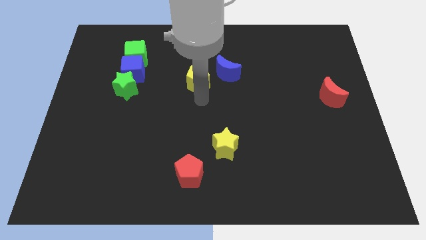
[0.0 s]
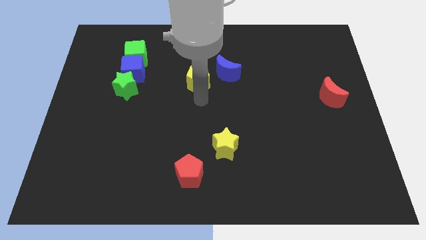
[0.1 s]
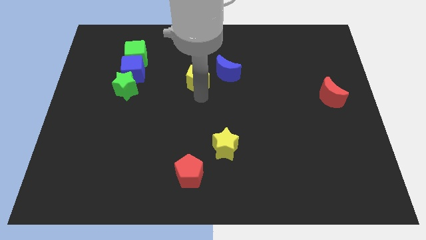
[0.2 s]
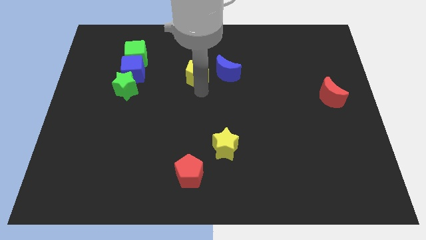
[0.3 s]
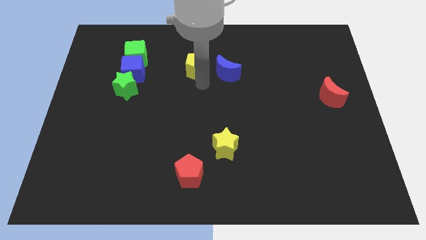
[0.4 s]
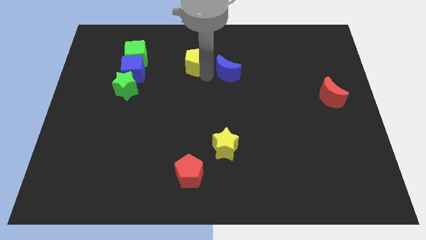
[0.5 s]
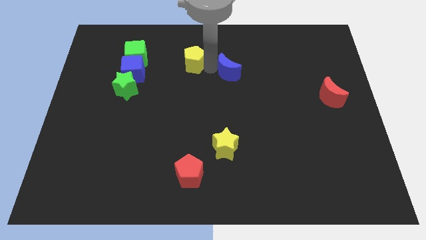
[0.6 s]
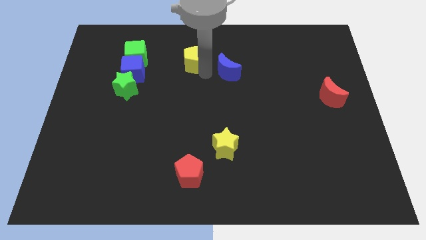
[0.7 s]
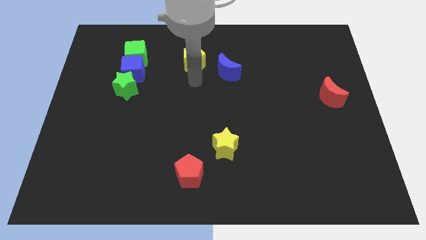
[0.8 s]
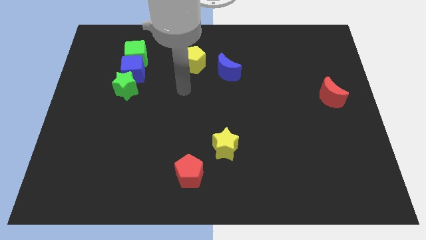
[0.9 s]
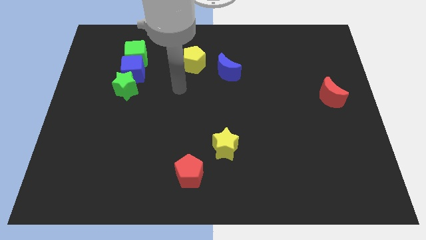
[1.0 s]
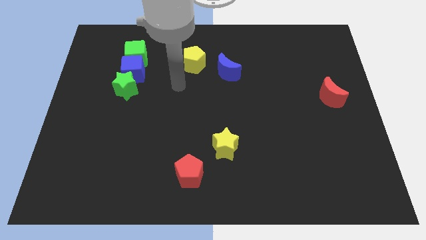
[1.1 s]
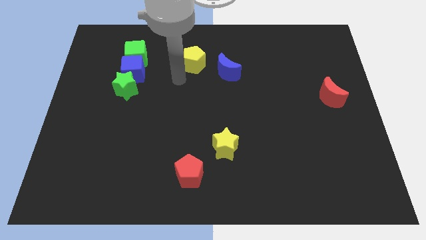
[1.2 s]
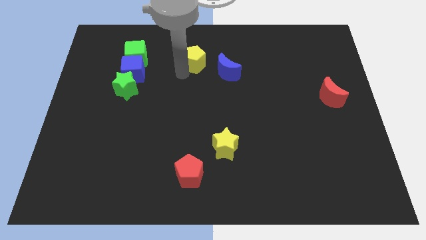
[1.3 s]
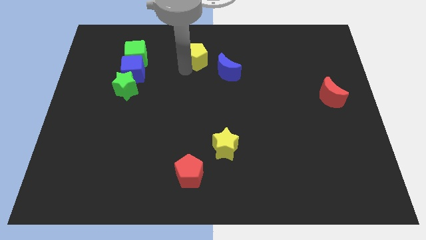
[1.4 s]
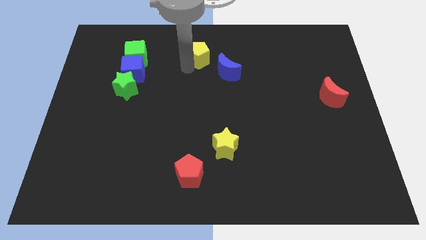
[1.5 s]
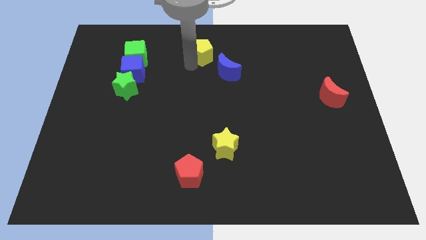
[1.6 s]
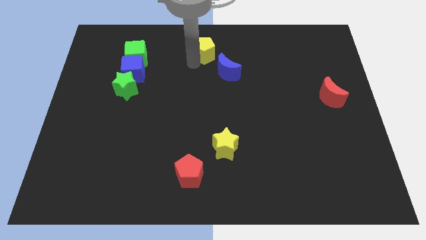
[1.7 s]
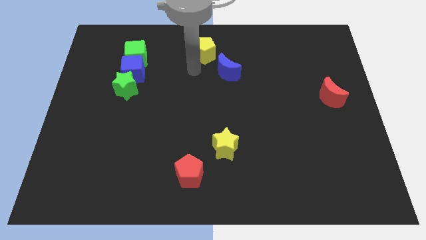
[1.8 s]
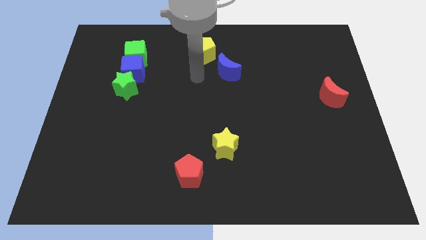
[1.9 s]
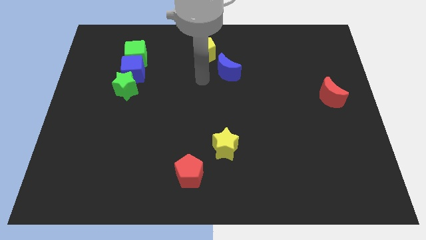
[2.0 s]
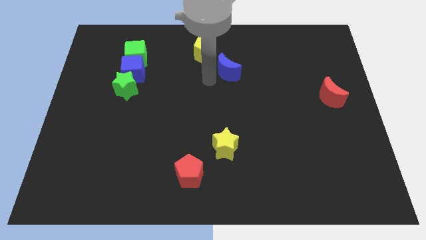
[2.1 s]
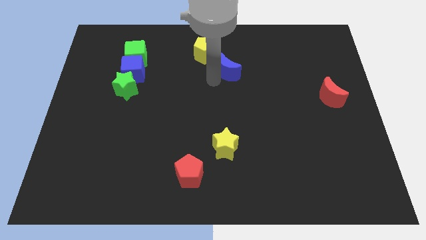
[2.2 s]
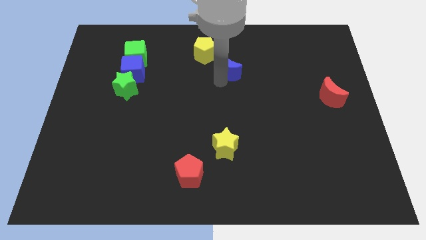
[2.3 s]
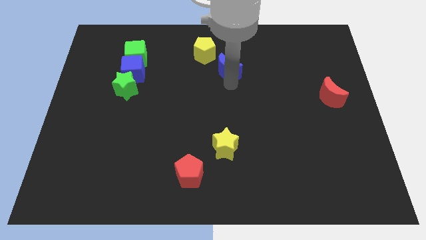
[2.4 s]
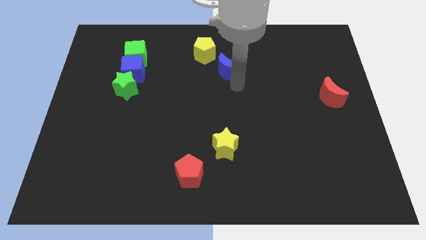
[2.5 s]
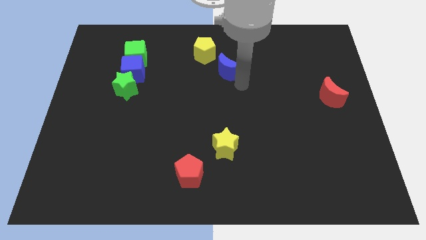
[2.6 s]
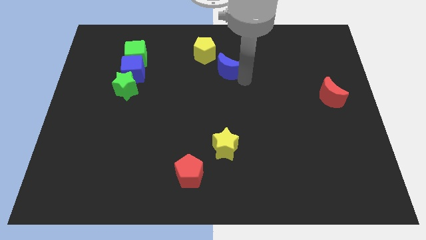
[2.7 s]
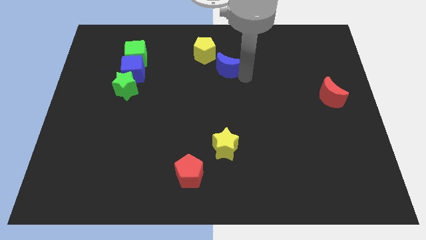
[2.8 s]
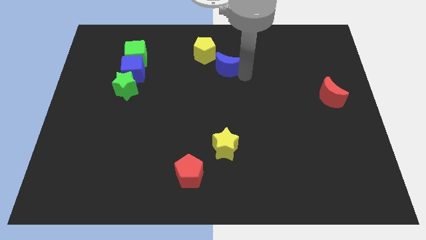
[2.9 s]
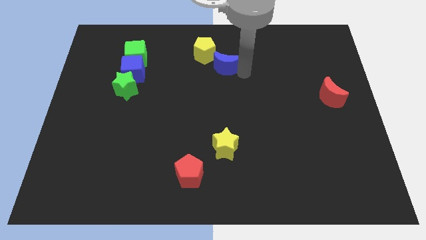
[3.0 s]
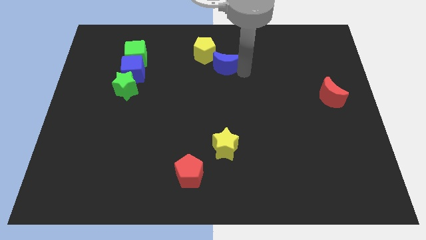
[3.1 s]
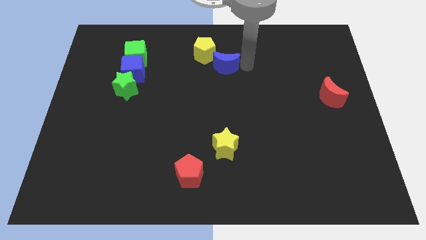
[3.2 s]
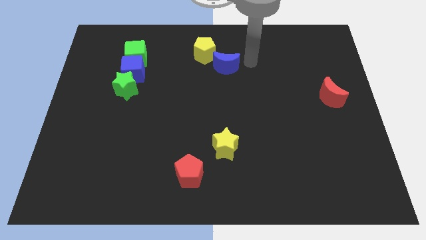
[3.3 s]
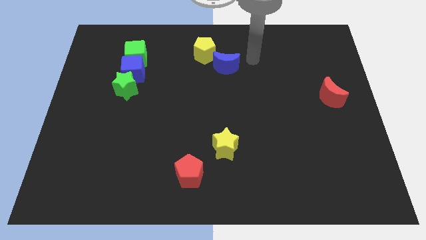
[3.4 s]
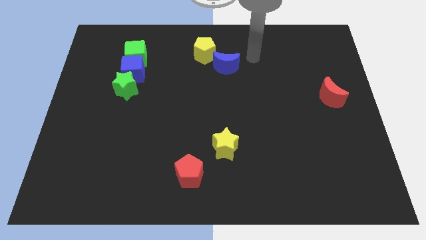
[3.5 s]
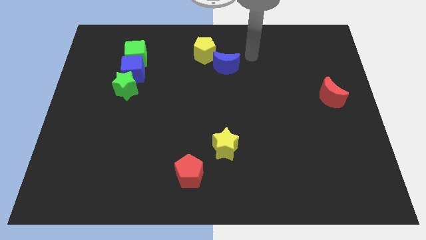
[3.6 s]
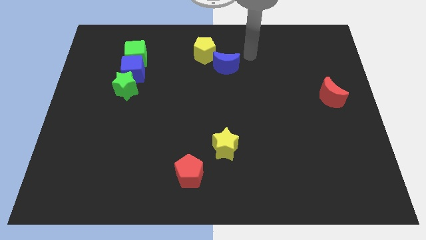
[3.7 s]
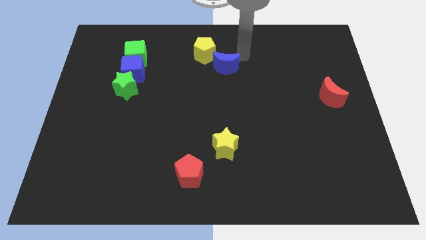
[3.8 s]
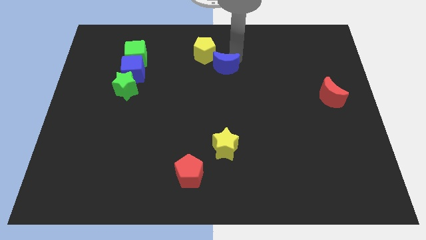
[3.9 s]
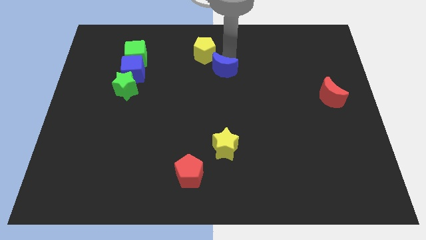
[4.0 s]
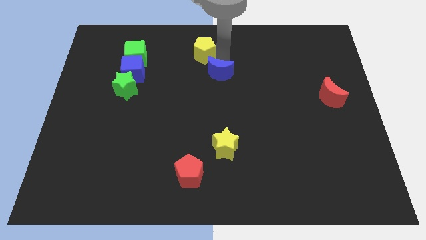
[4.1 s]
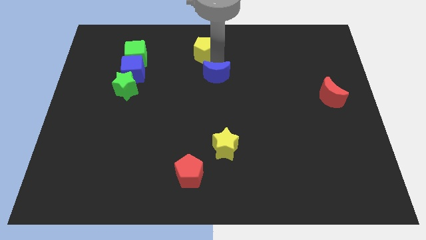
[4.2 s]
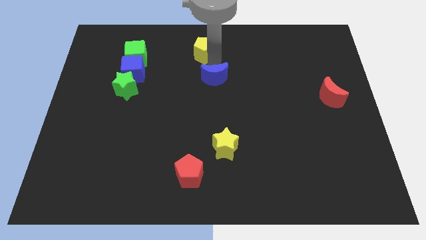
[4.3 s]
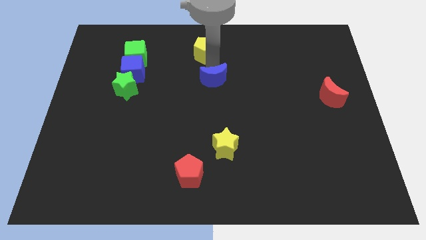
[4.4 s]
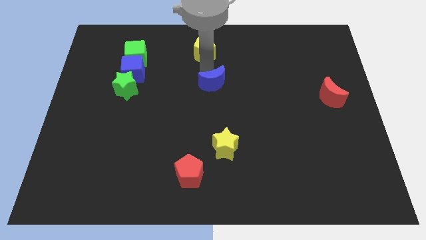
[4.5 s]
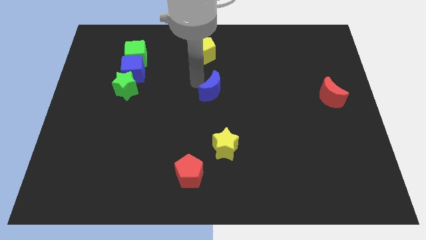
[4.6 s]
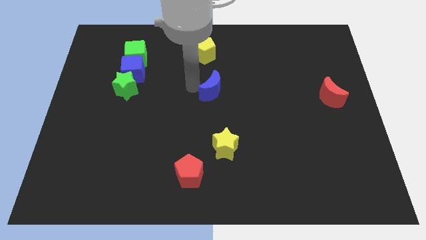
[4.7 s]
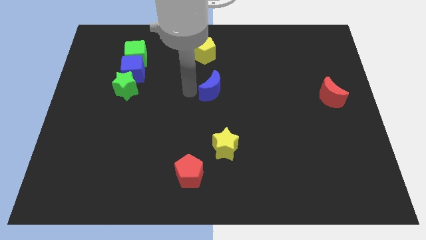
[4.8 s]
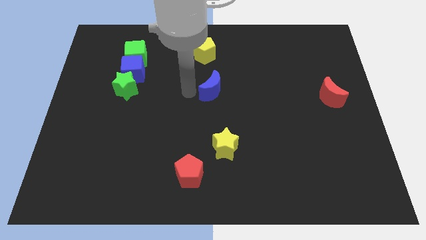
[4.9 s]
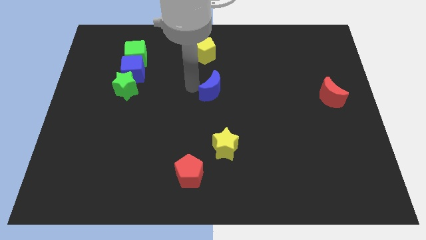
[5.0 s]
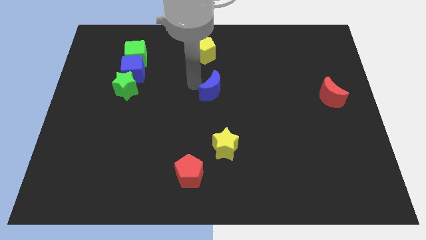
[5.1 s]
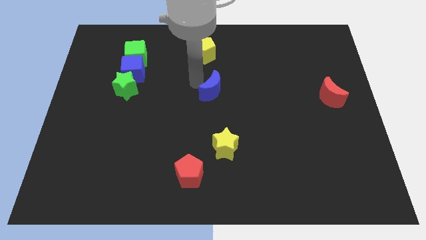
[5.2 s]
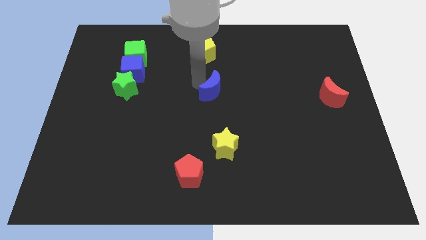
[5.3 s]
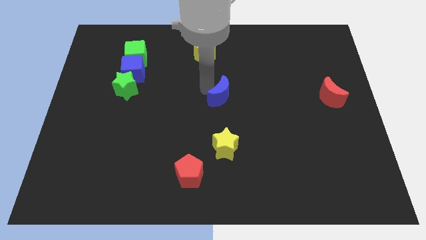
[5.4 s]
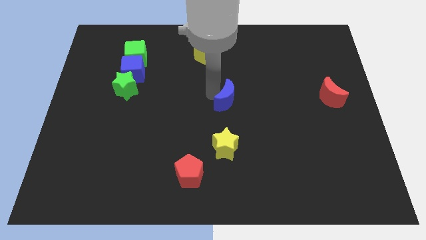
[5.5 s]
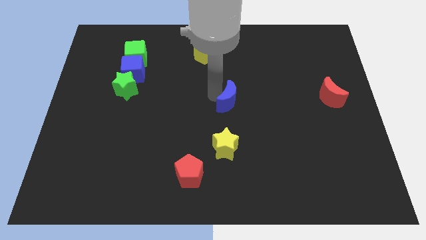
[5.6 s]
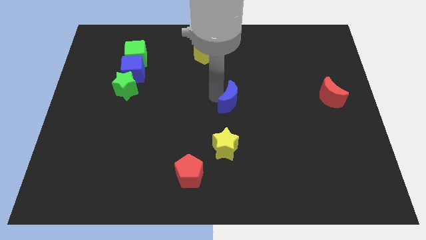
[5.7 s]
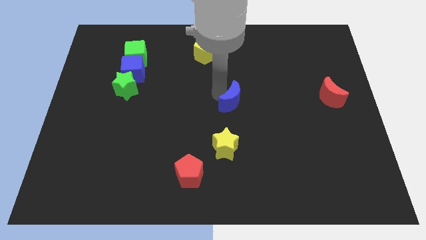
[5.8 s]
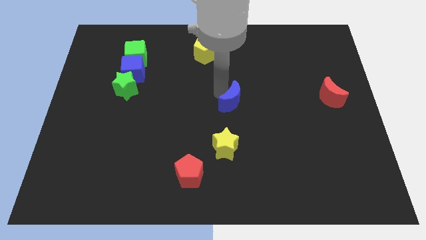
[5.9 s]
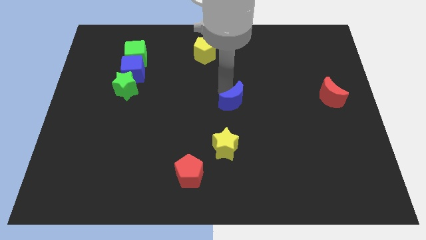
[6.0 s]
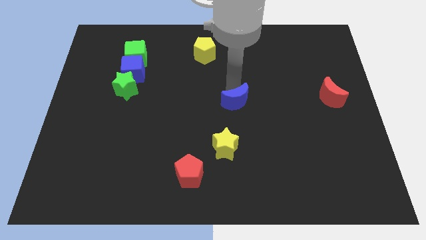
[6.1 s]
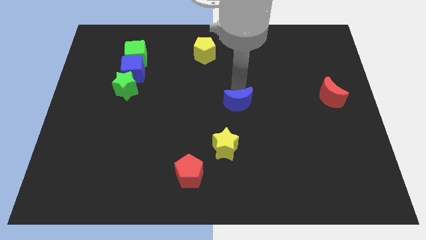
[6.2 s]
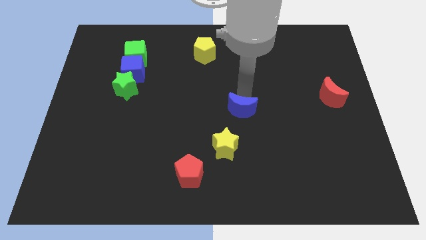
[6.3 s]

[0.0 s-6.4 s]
separate the yellow pentagon and the blue crescent

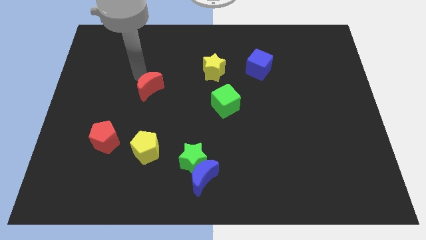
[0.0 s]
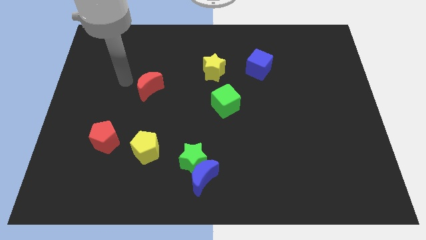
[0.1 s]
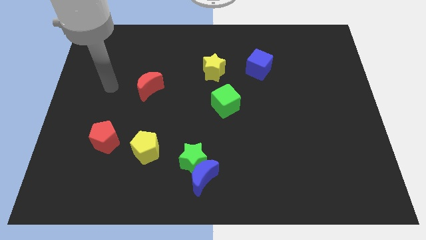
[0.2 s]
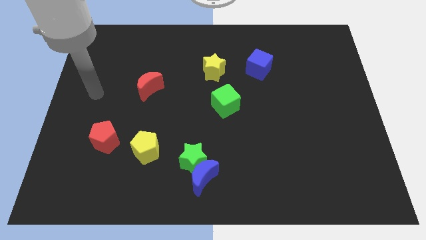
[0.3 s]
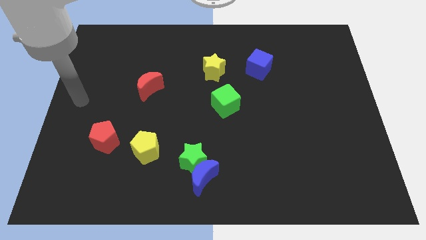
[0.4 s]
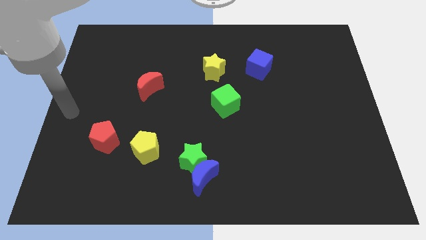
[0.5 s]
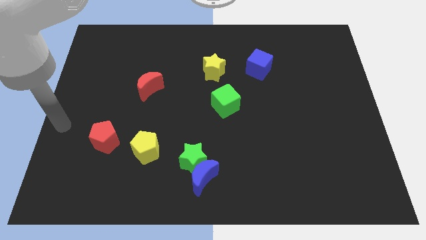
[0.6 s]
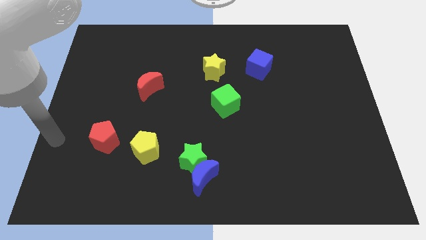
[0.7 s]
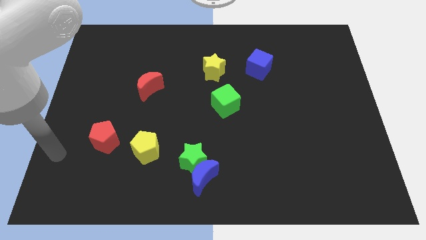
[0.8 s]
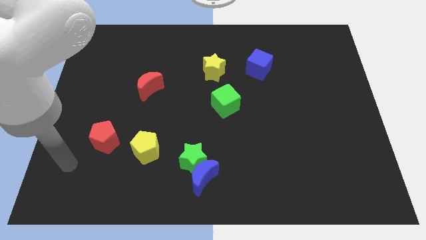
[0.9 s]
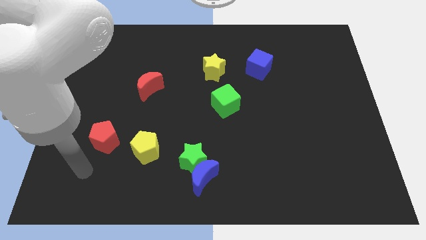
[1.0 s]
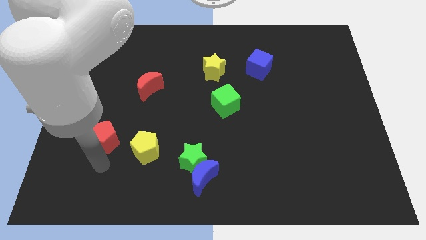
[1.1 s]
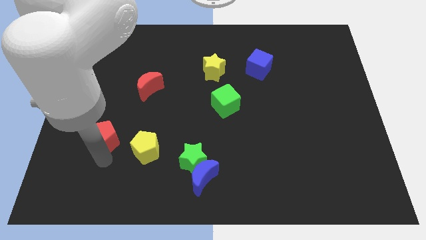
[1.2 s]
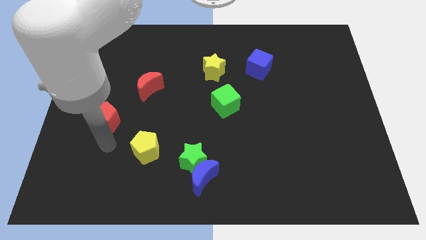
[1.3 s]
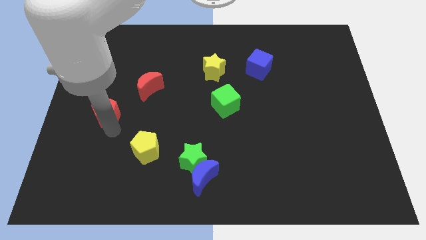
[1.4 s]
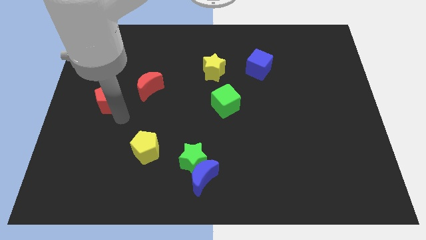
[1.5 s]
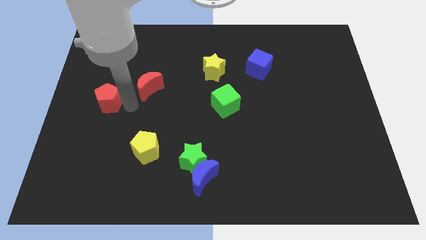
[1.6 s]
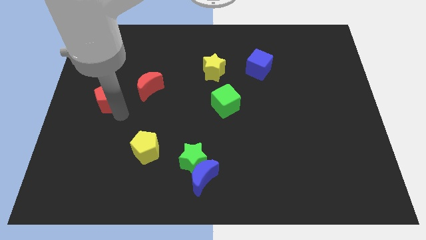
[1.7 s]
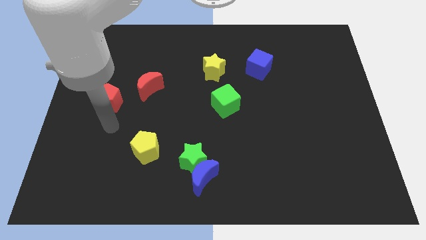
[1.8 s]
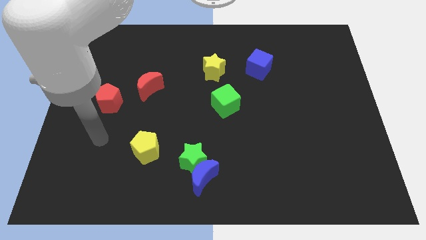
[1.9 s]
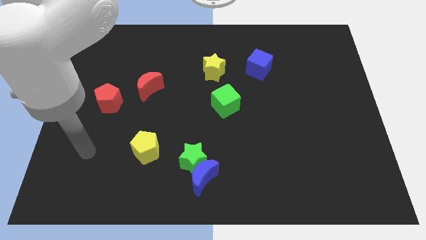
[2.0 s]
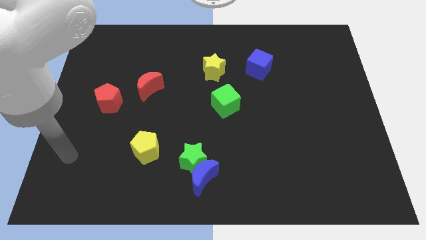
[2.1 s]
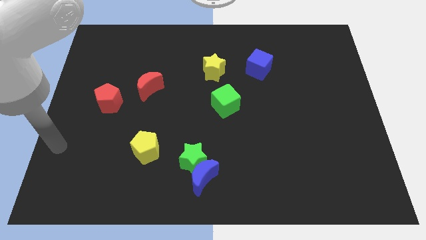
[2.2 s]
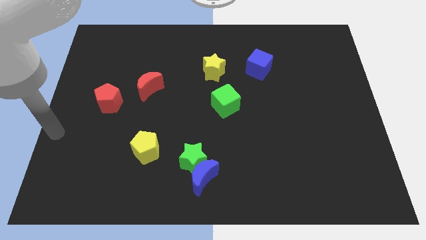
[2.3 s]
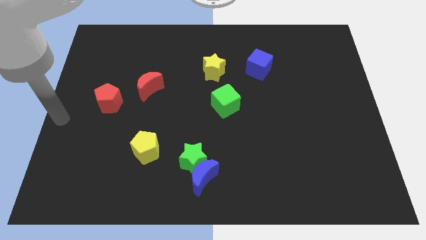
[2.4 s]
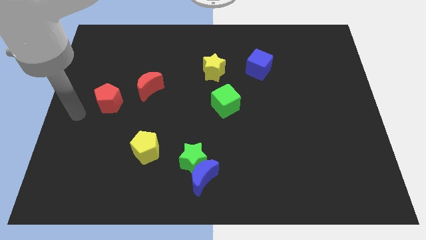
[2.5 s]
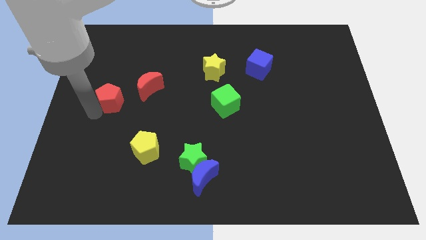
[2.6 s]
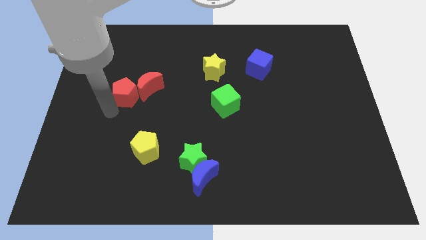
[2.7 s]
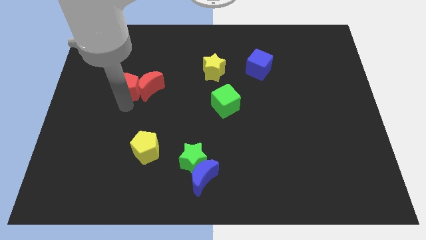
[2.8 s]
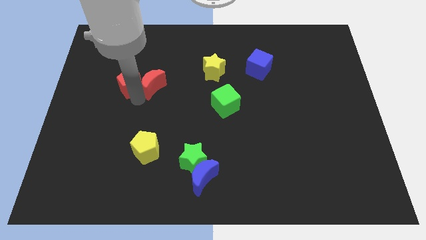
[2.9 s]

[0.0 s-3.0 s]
place the red pentagon close to the left of the red moon
